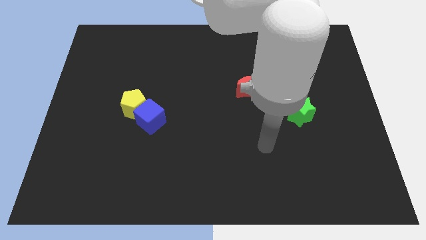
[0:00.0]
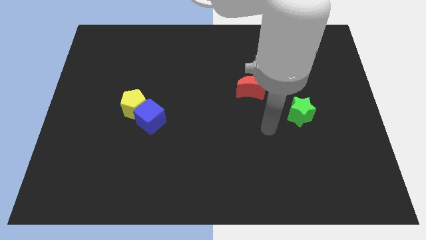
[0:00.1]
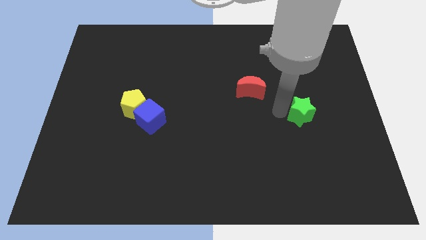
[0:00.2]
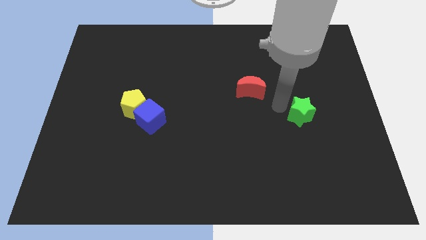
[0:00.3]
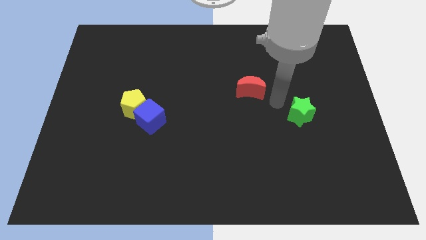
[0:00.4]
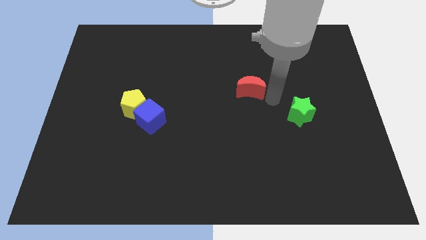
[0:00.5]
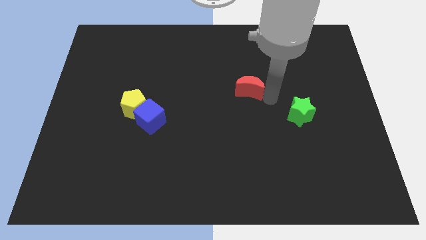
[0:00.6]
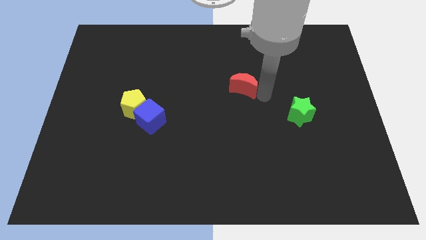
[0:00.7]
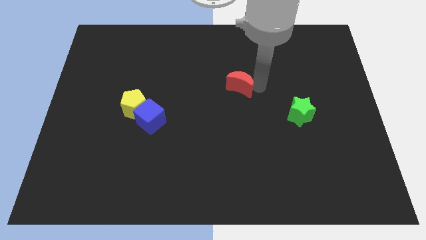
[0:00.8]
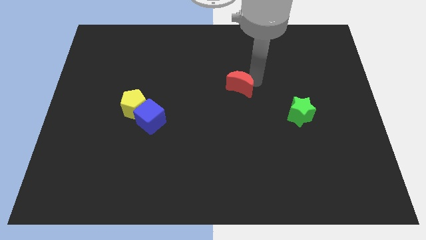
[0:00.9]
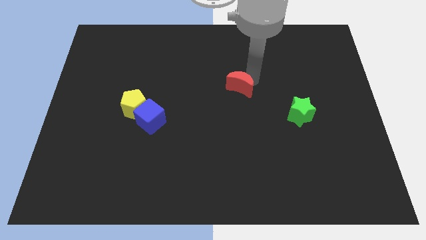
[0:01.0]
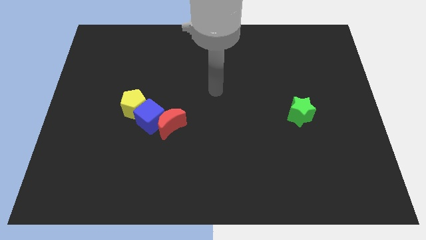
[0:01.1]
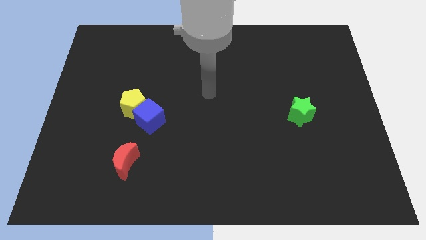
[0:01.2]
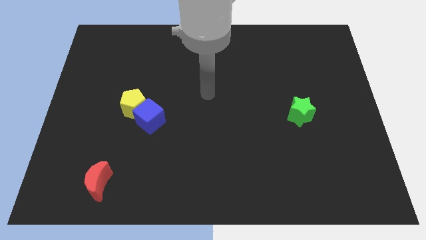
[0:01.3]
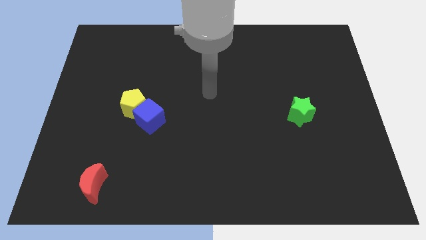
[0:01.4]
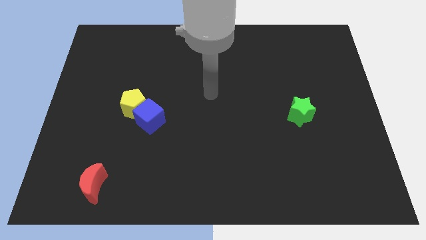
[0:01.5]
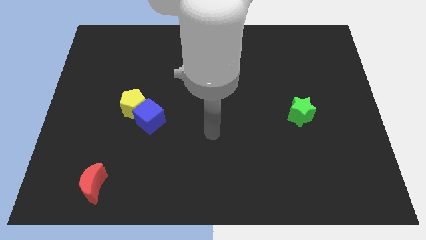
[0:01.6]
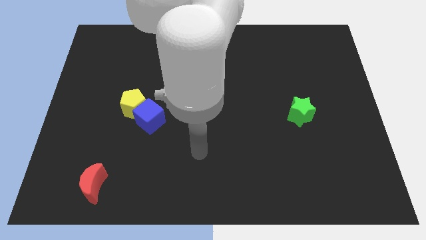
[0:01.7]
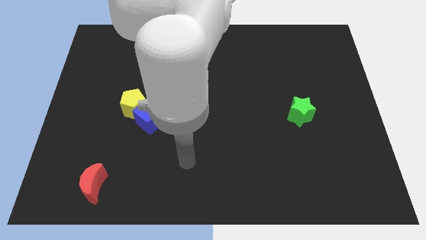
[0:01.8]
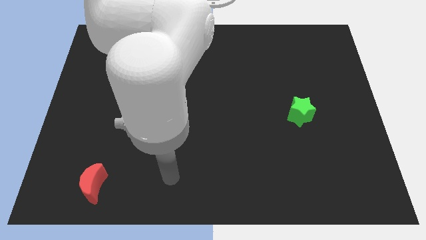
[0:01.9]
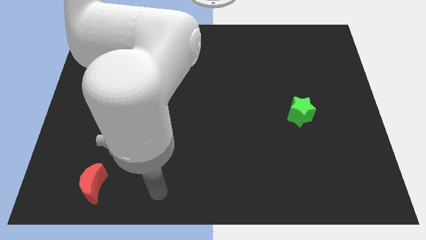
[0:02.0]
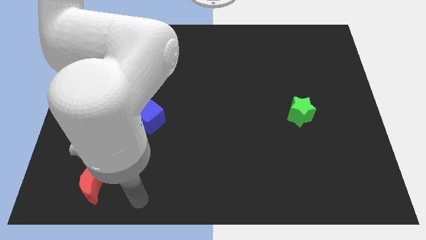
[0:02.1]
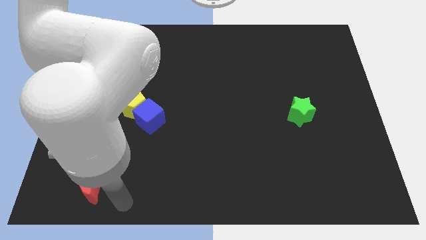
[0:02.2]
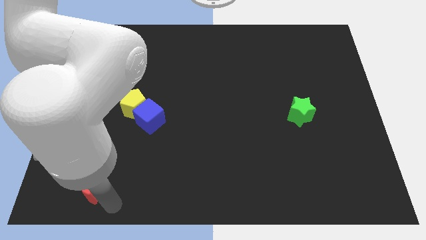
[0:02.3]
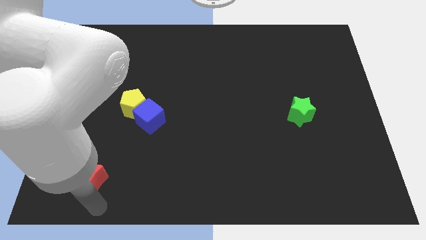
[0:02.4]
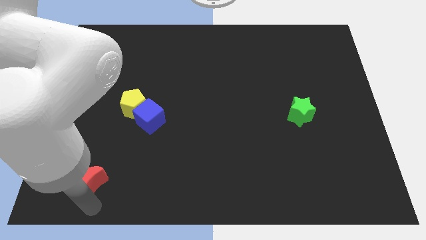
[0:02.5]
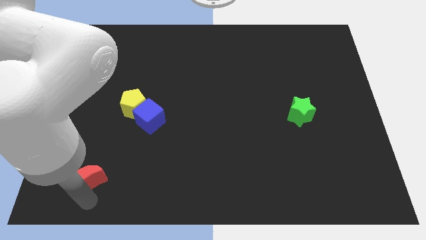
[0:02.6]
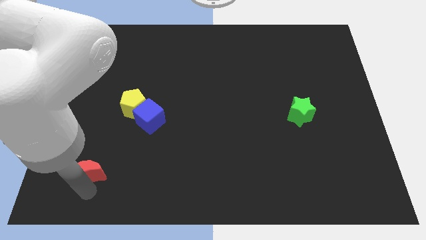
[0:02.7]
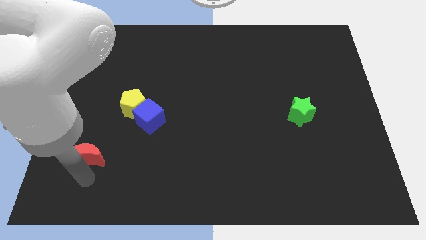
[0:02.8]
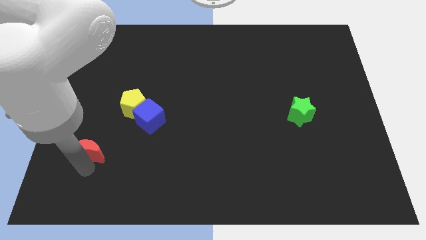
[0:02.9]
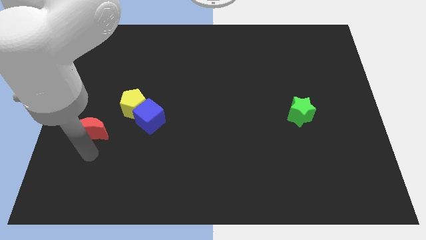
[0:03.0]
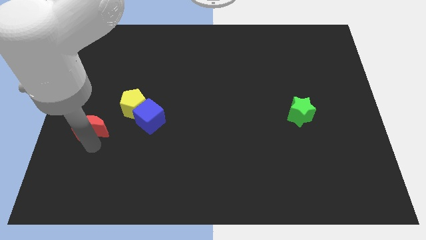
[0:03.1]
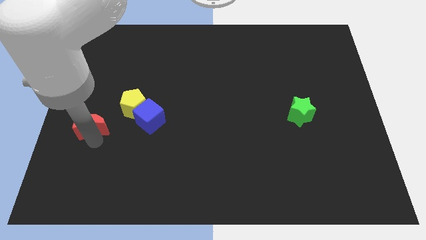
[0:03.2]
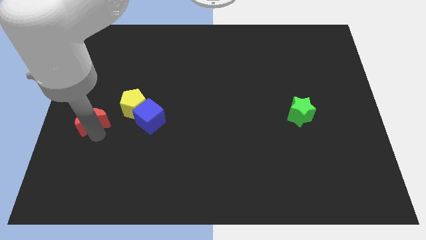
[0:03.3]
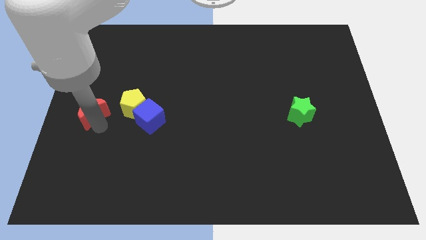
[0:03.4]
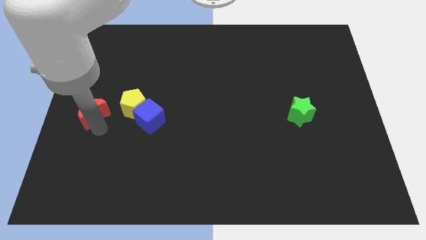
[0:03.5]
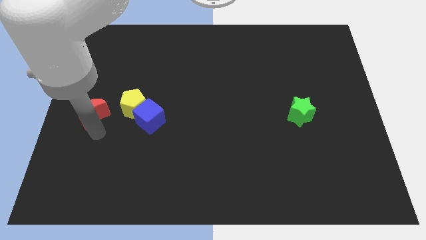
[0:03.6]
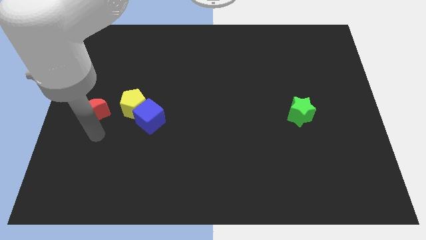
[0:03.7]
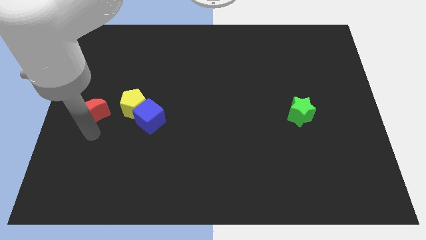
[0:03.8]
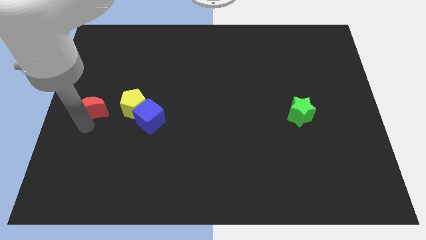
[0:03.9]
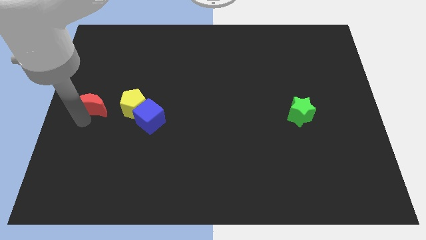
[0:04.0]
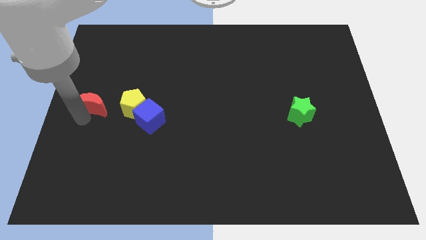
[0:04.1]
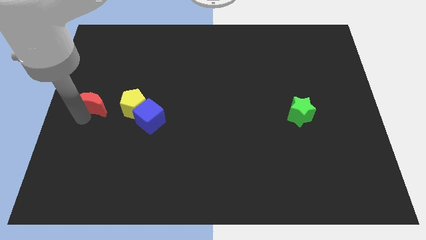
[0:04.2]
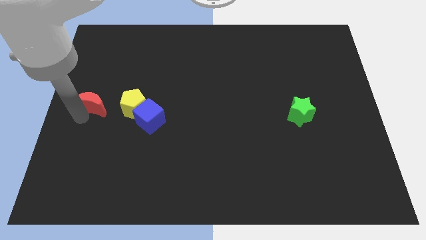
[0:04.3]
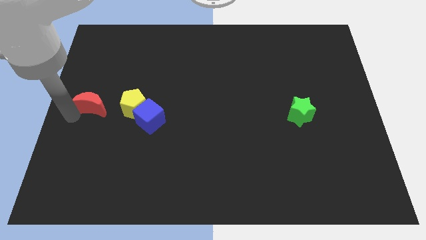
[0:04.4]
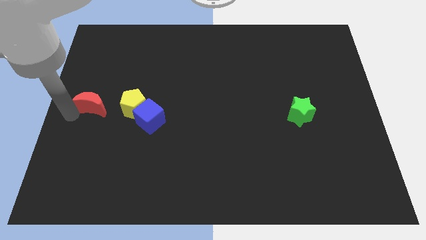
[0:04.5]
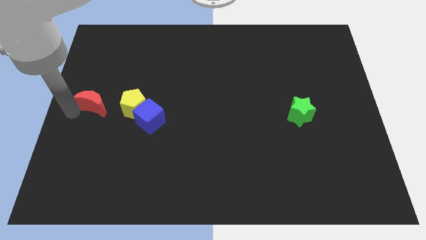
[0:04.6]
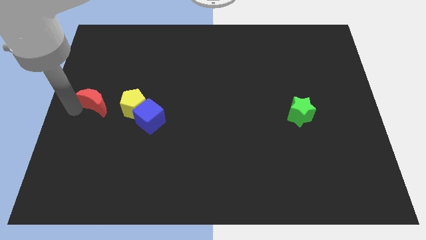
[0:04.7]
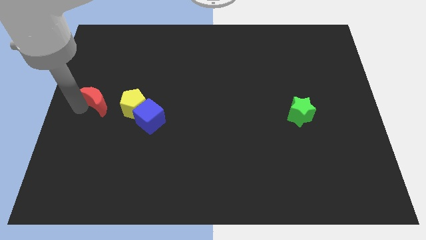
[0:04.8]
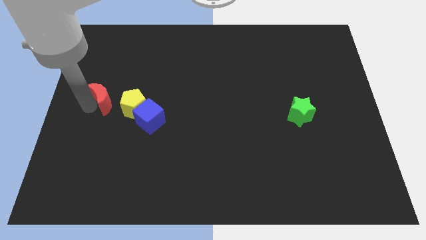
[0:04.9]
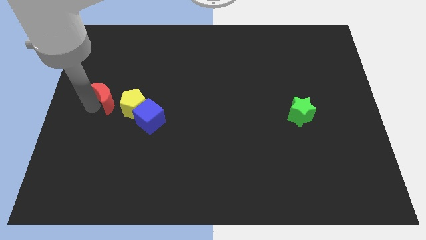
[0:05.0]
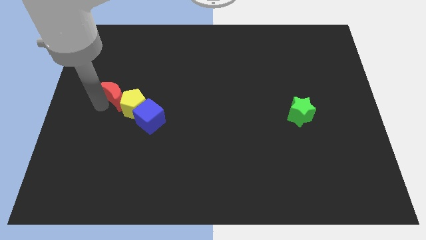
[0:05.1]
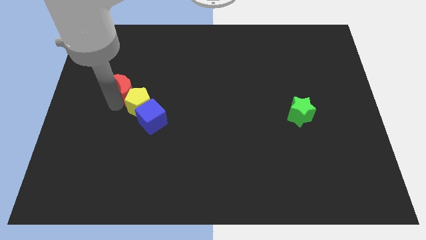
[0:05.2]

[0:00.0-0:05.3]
move the red block close to the pentagon

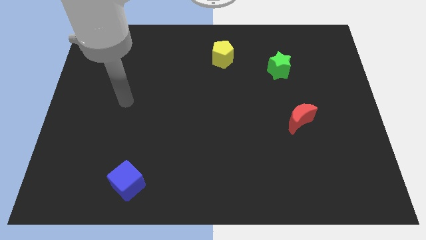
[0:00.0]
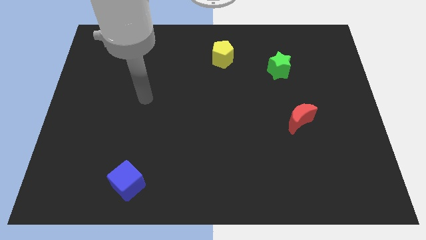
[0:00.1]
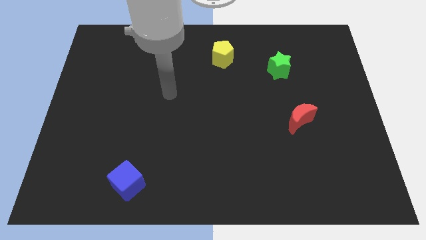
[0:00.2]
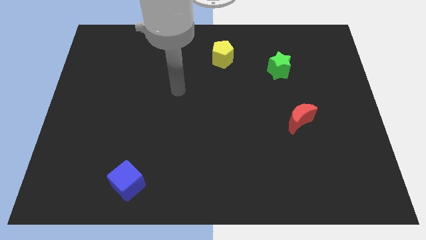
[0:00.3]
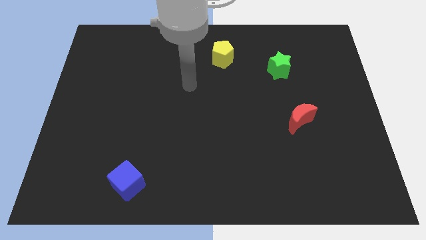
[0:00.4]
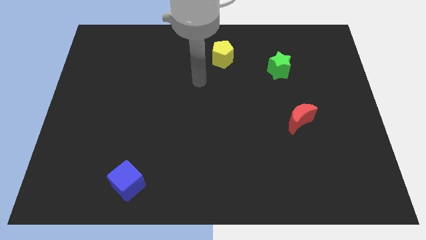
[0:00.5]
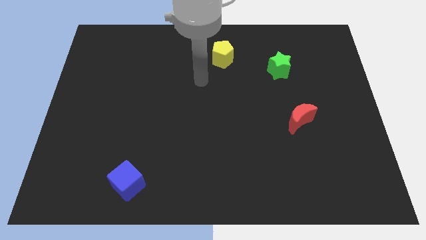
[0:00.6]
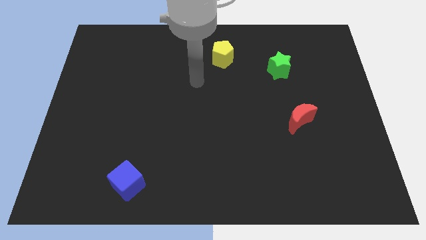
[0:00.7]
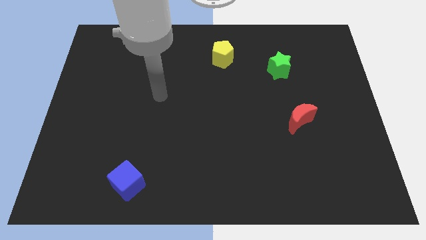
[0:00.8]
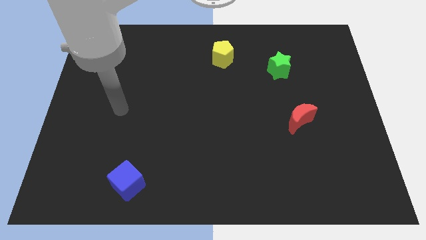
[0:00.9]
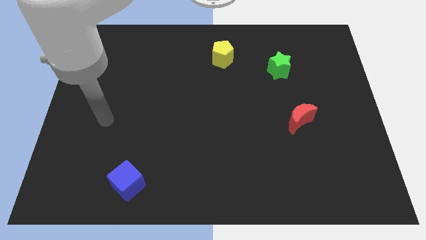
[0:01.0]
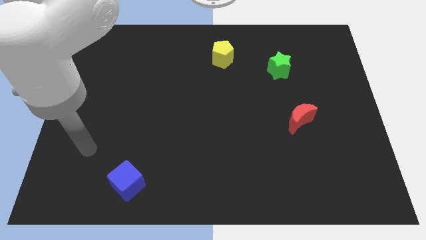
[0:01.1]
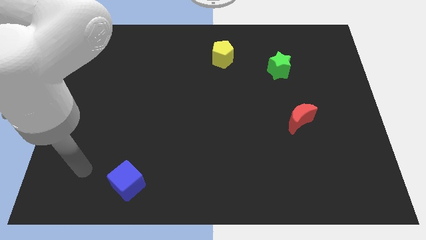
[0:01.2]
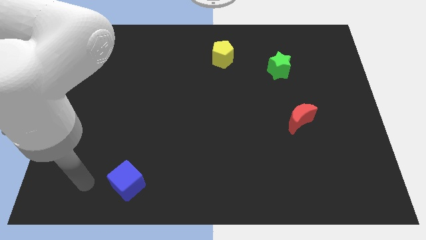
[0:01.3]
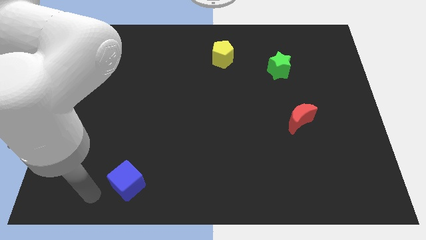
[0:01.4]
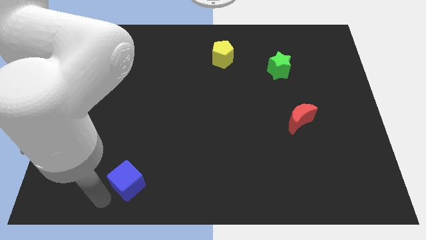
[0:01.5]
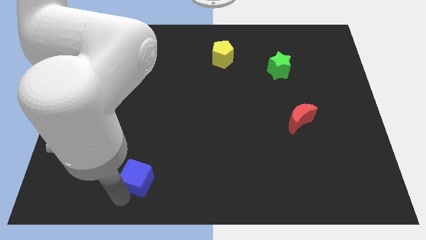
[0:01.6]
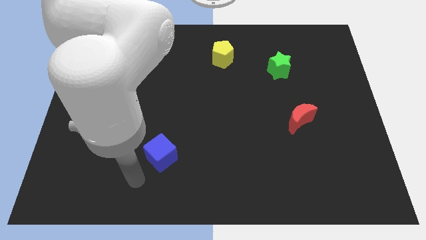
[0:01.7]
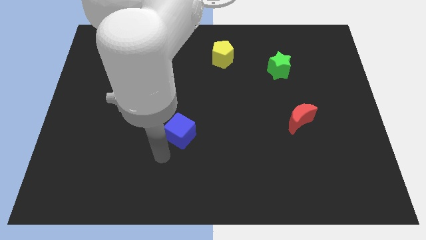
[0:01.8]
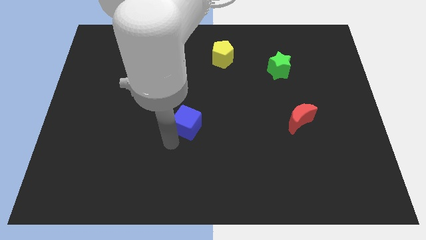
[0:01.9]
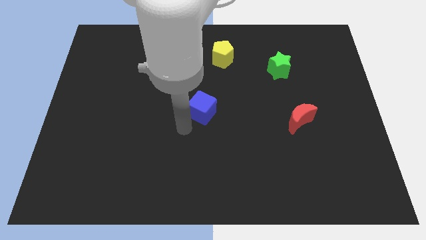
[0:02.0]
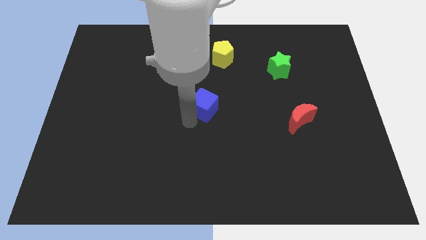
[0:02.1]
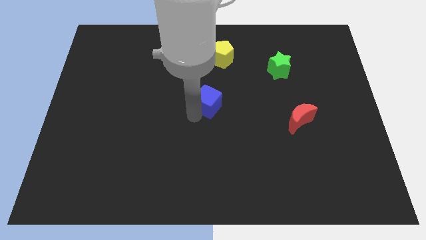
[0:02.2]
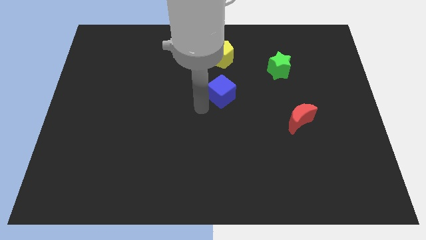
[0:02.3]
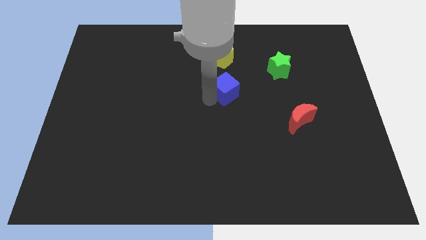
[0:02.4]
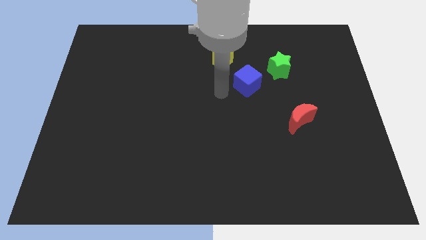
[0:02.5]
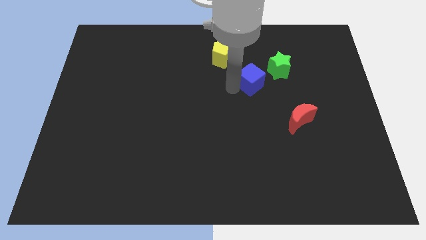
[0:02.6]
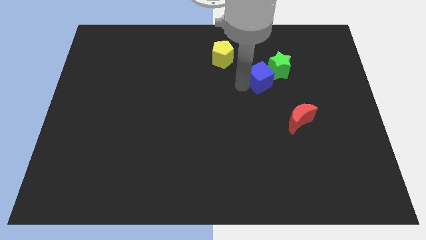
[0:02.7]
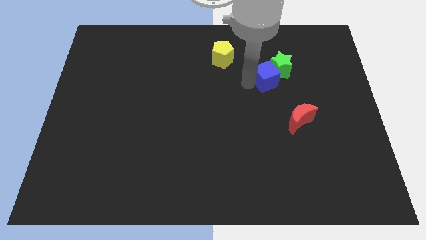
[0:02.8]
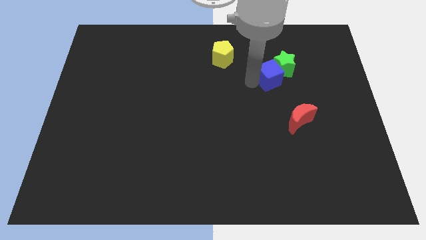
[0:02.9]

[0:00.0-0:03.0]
put the blue cube next to the star

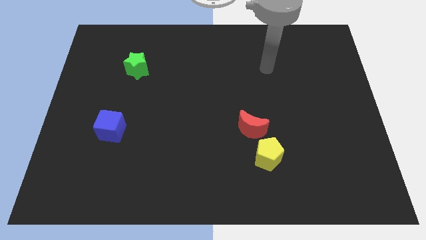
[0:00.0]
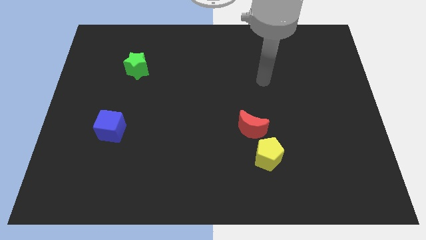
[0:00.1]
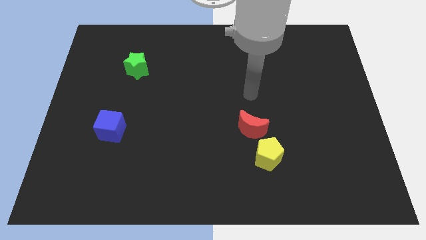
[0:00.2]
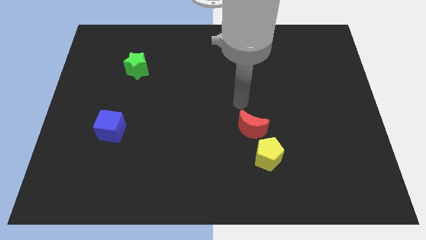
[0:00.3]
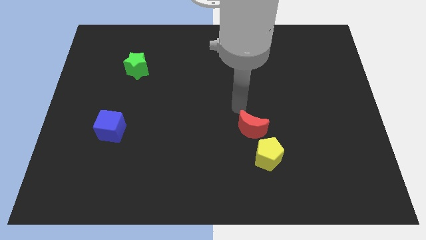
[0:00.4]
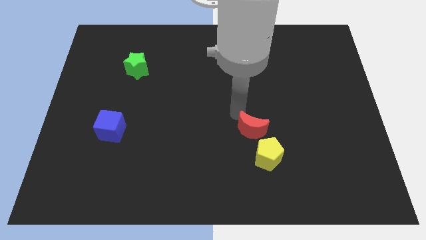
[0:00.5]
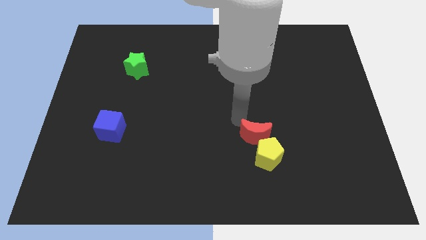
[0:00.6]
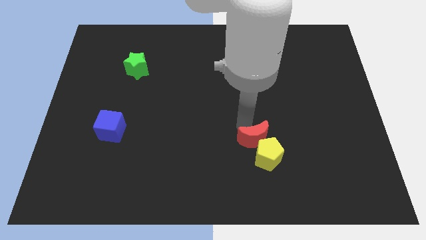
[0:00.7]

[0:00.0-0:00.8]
move the red moon close to the yellow block
